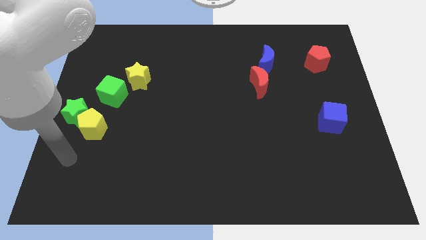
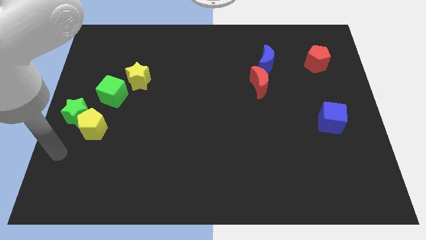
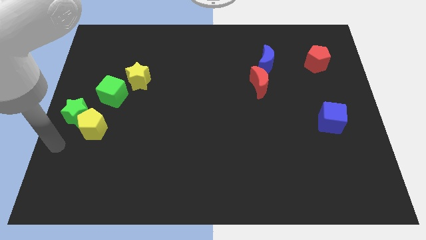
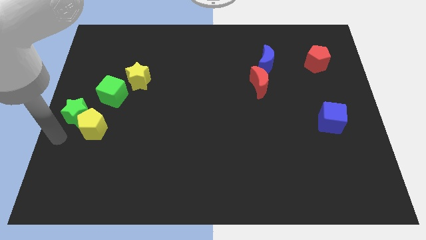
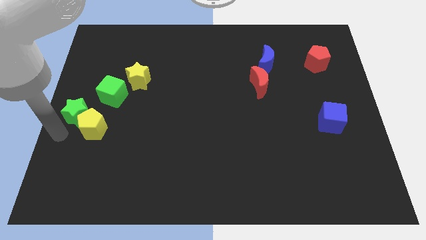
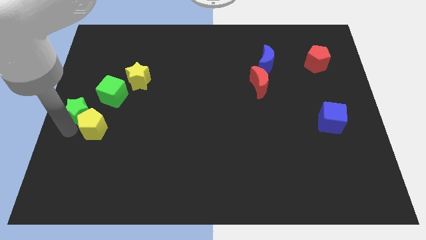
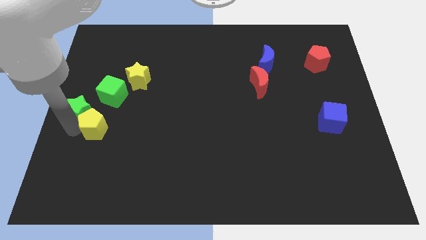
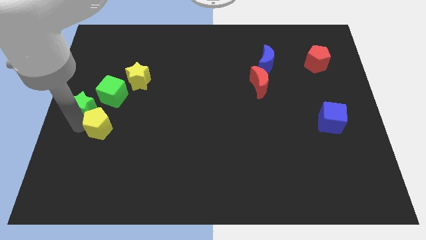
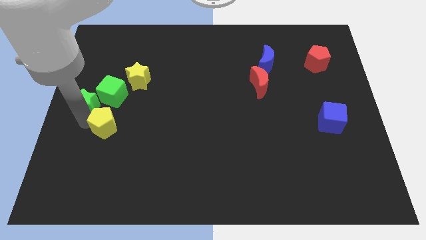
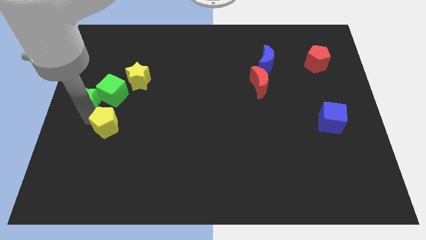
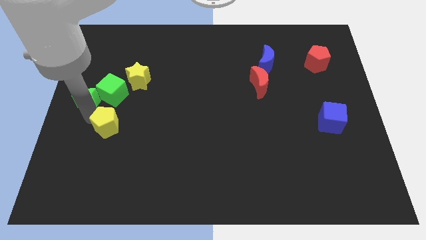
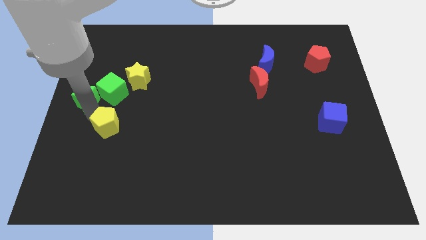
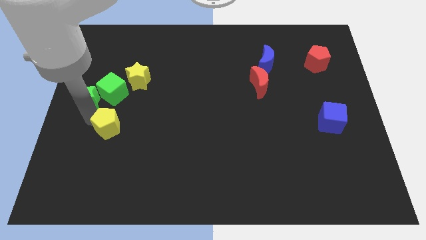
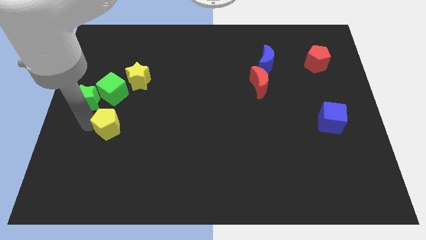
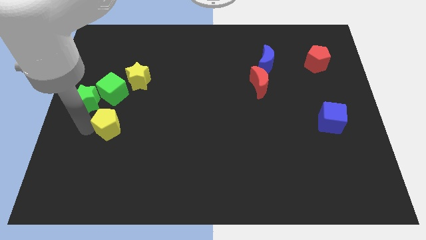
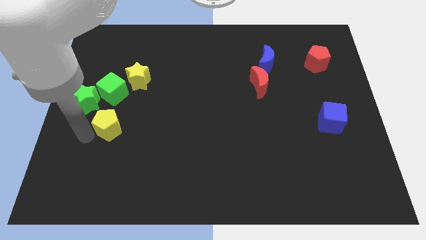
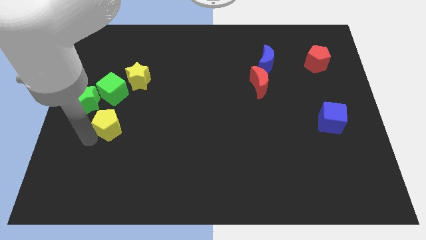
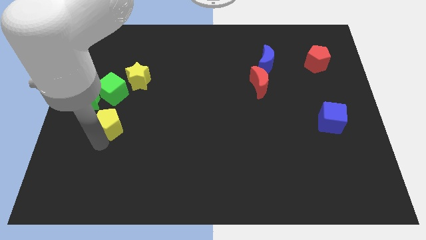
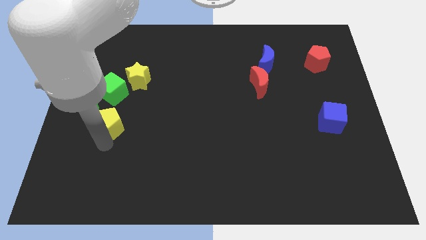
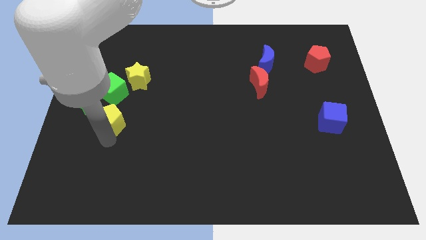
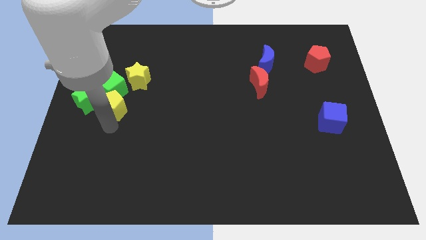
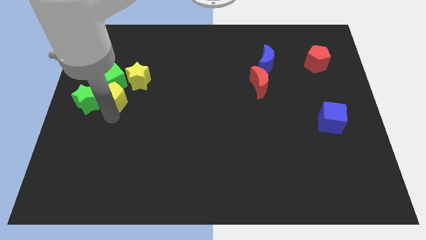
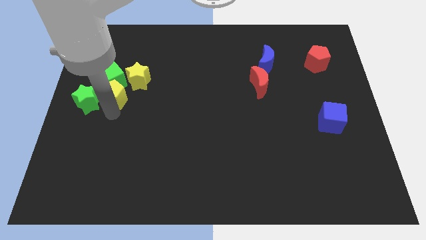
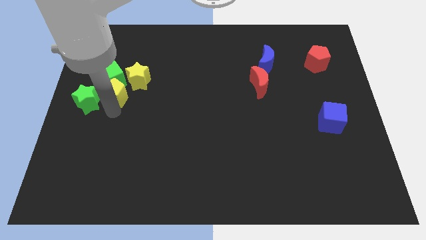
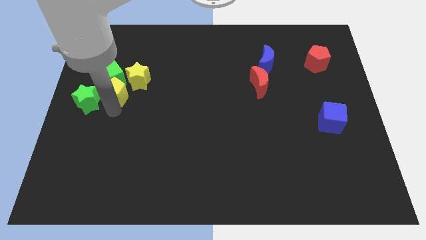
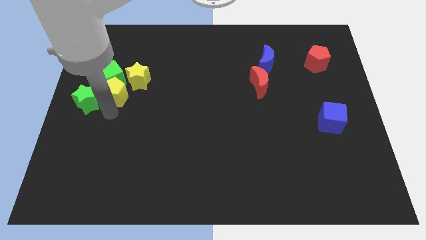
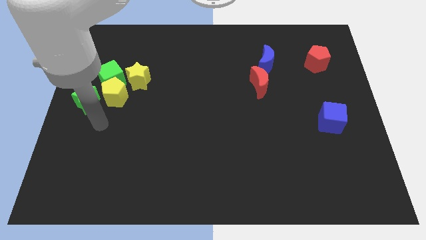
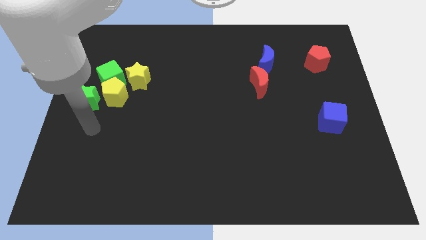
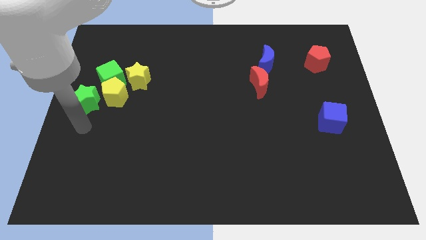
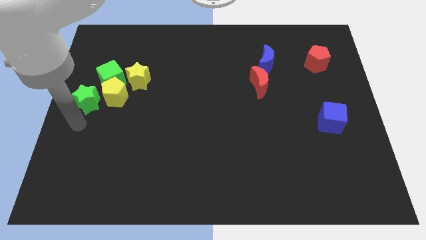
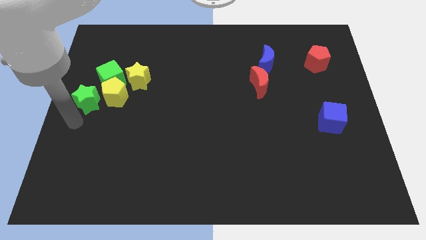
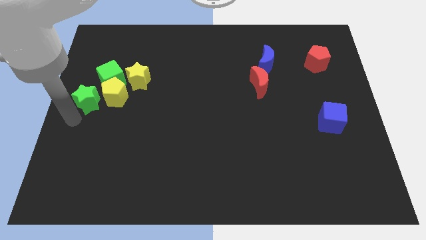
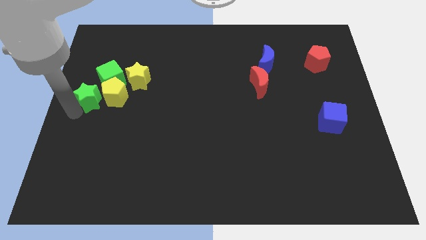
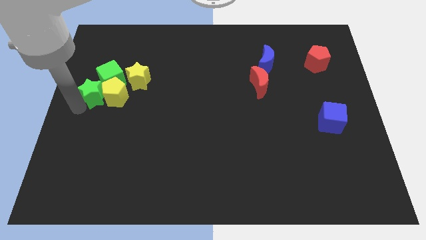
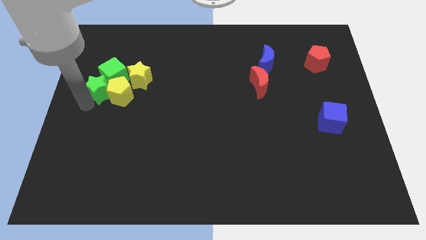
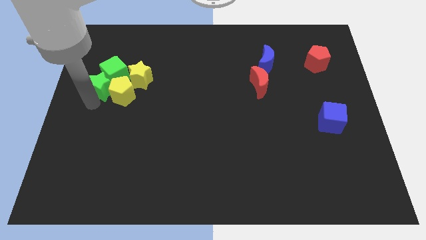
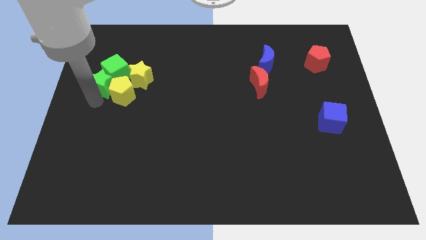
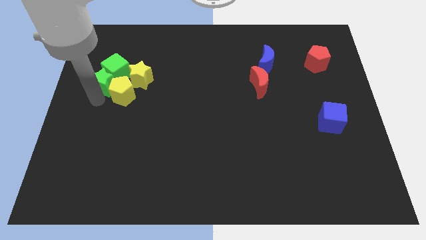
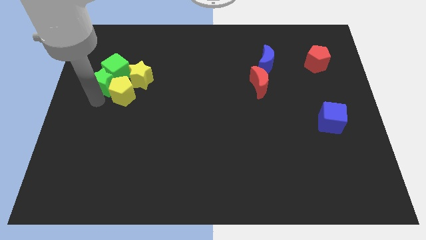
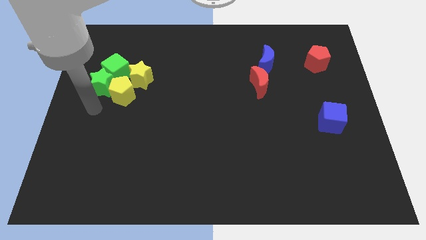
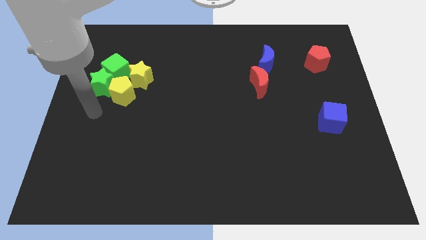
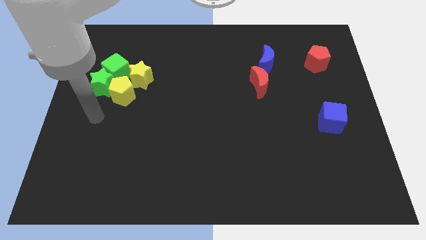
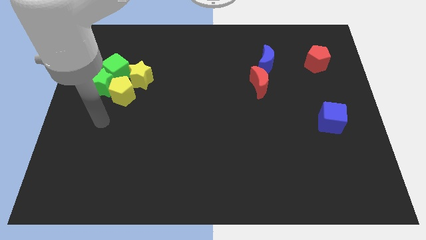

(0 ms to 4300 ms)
group up the yellow and green blocks together at the top left side

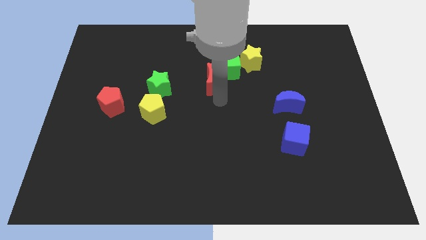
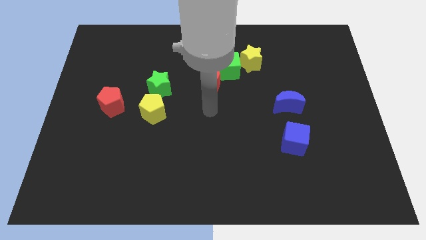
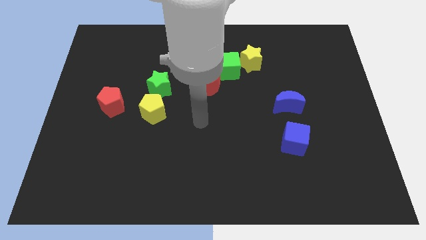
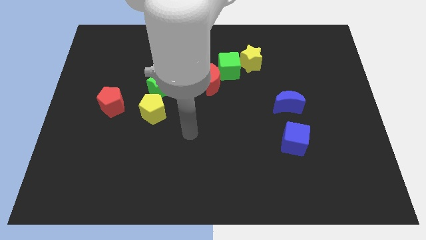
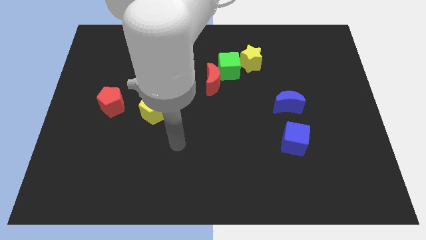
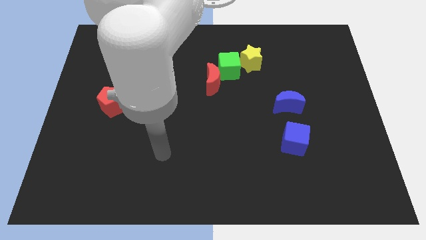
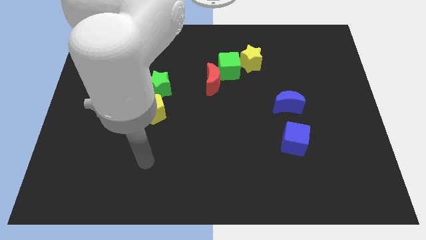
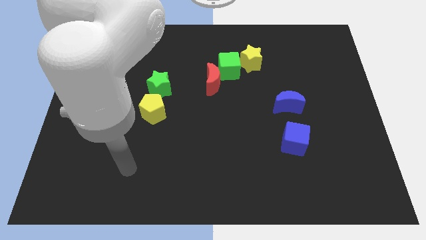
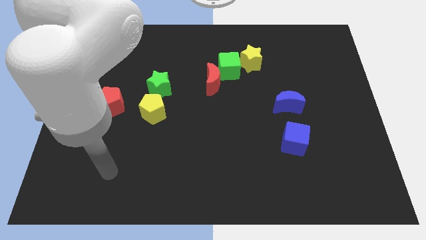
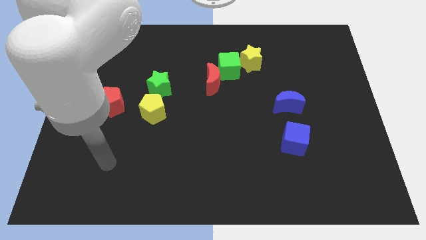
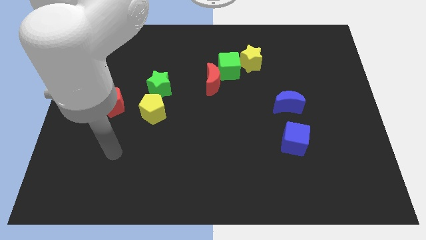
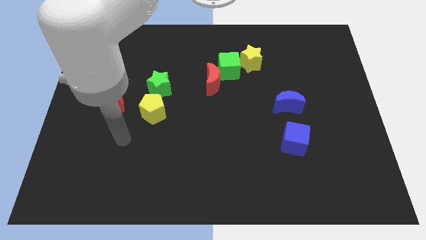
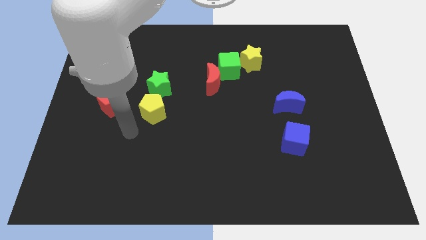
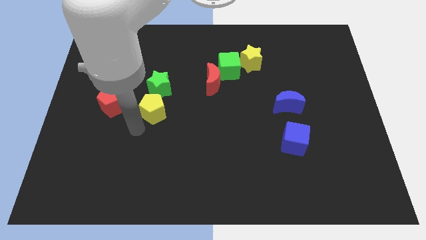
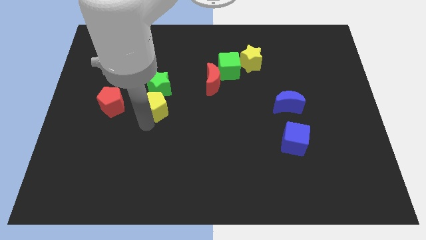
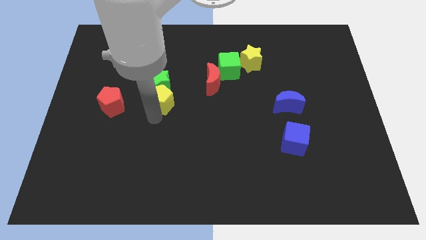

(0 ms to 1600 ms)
push the yellow pentagon into the green star

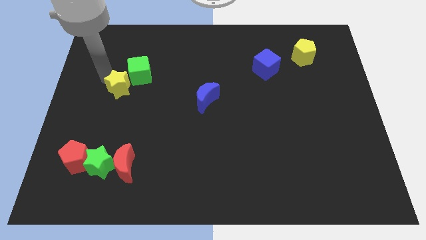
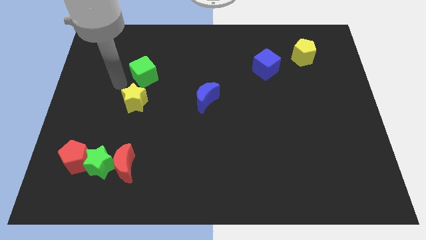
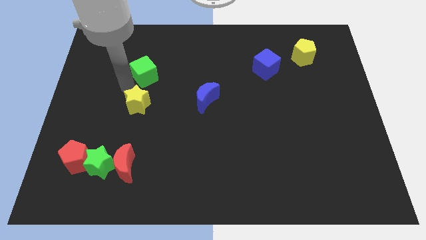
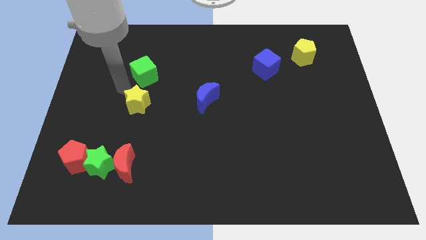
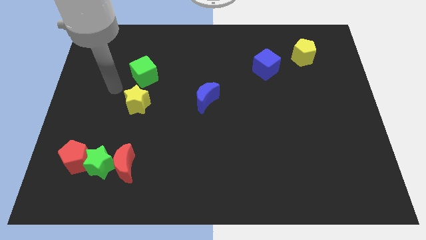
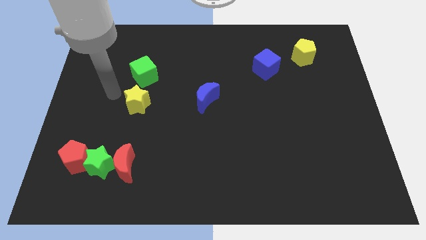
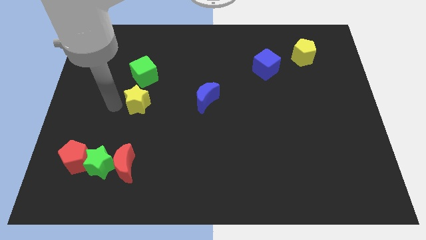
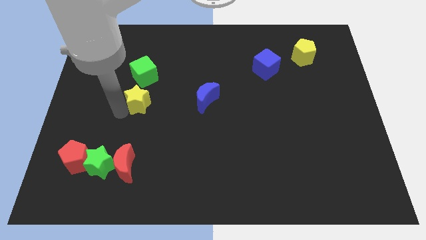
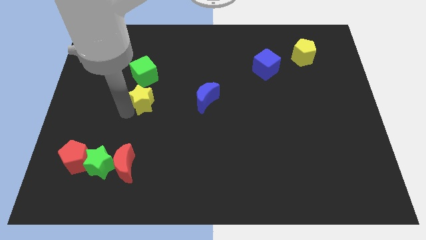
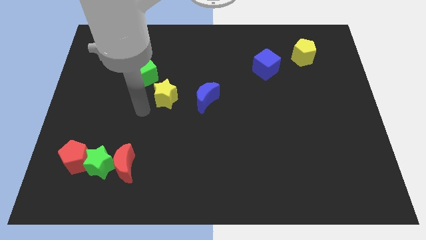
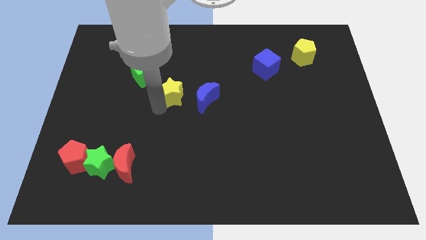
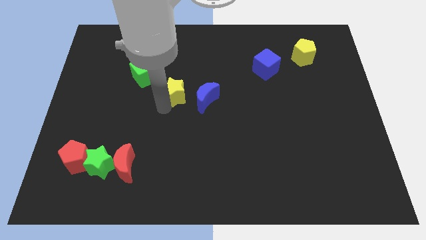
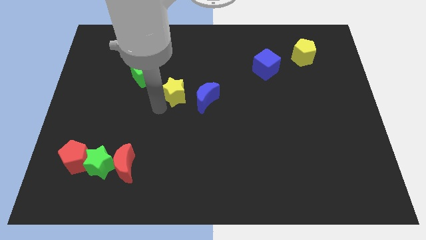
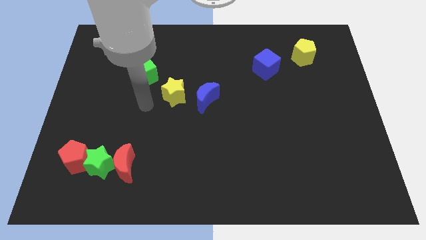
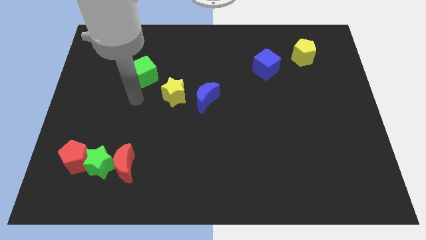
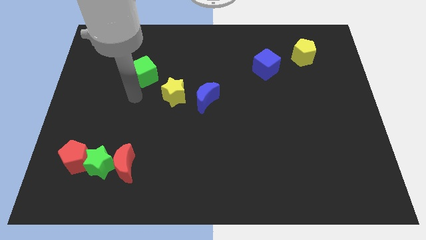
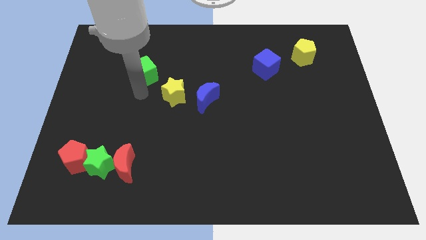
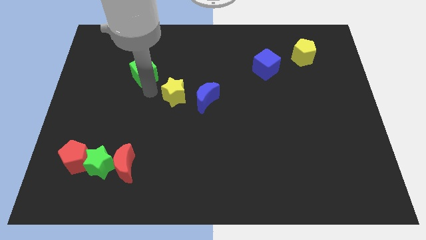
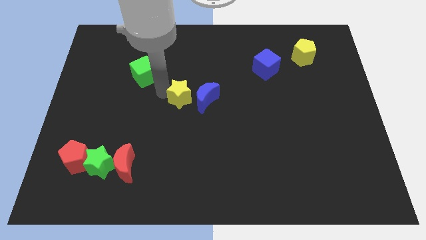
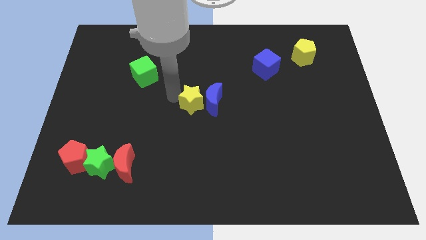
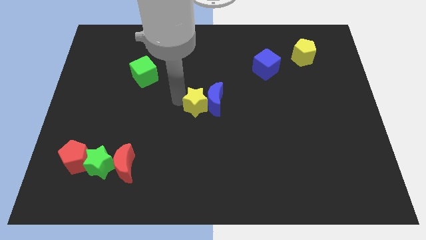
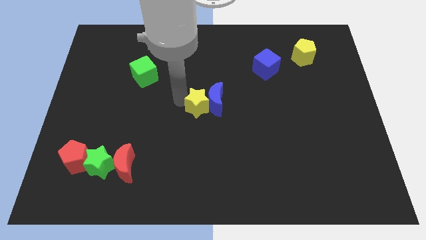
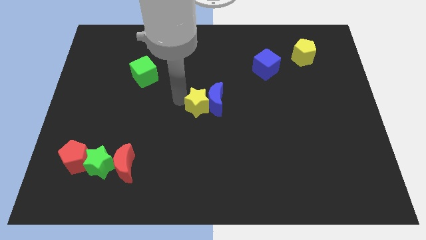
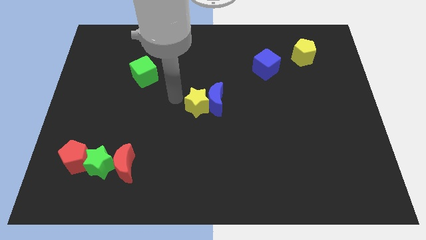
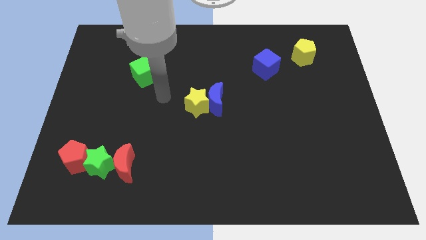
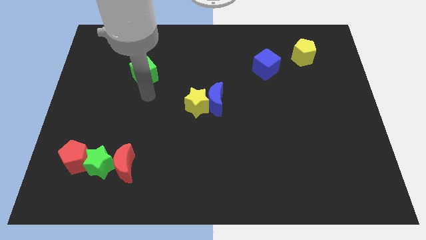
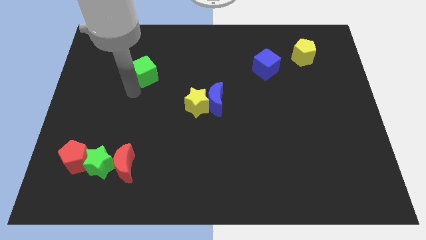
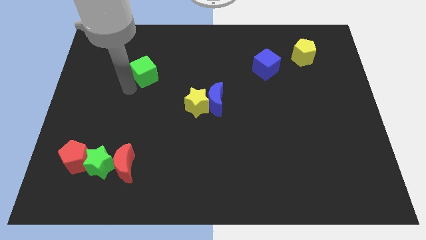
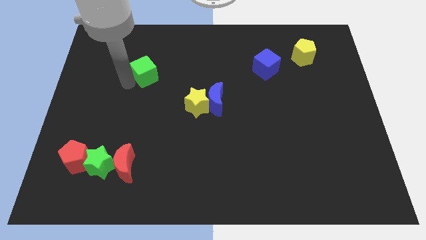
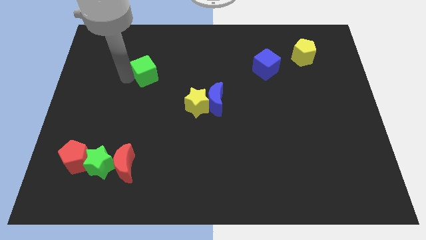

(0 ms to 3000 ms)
move the yellow star to the left side of the blue crescent

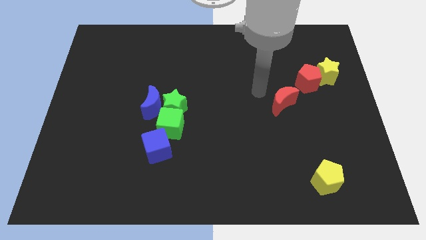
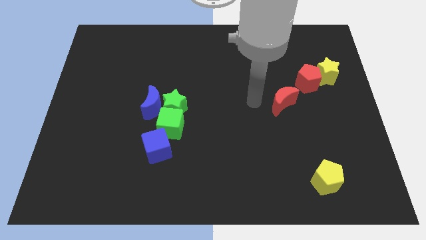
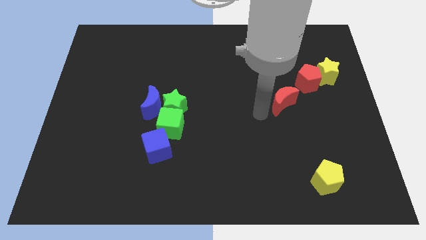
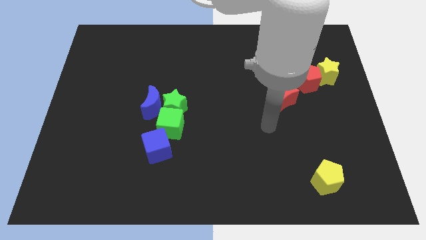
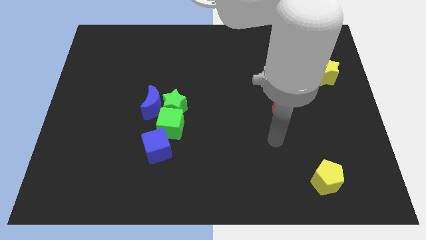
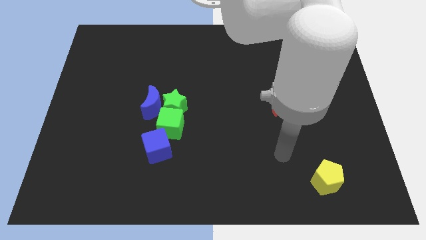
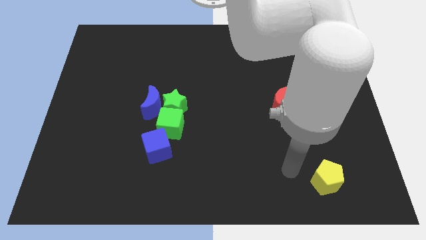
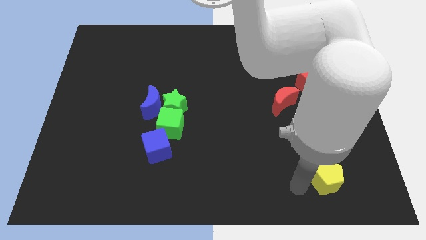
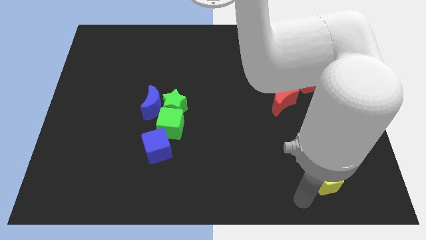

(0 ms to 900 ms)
move your arm towards yellow pentagon
